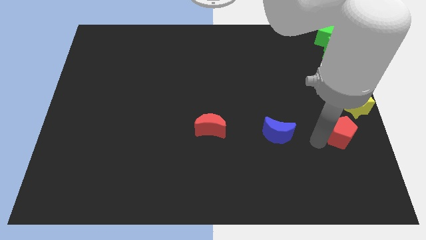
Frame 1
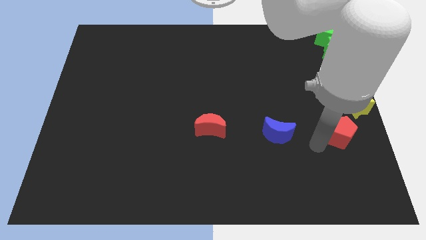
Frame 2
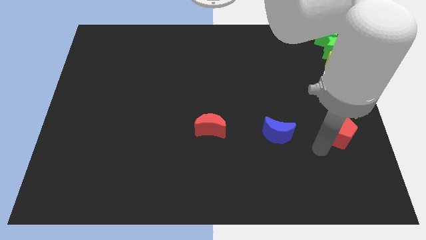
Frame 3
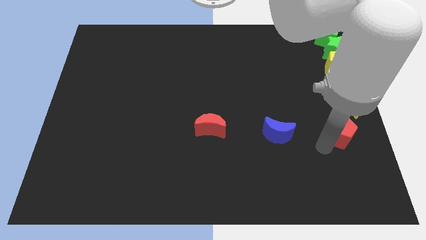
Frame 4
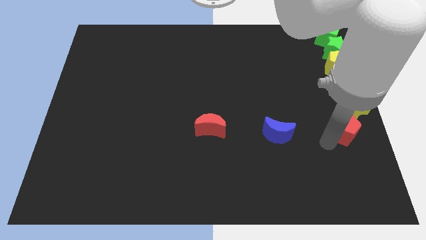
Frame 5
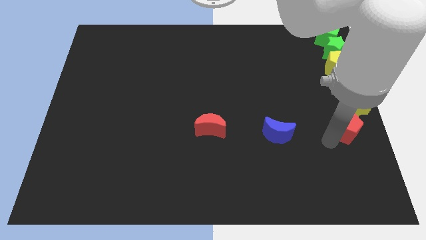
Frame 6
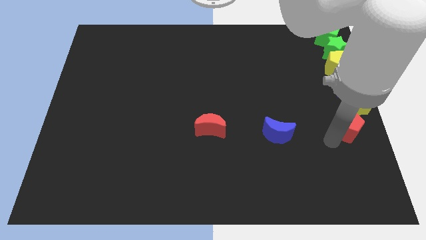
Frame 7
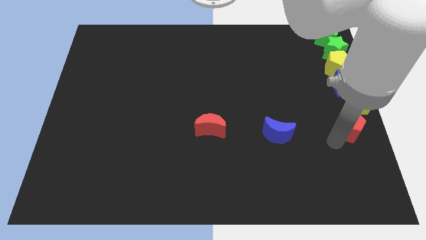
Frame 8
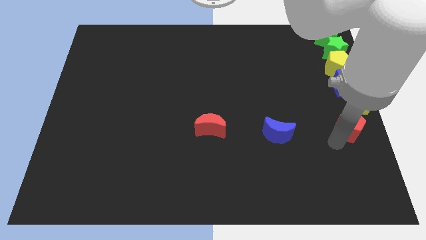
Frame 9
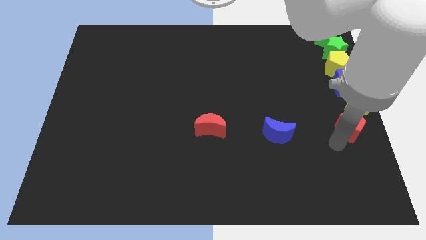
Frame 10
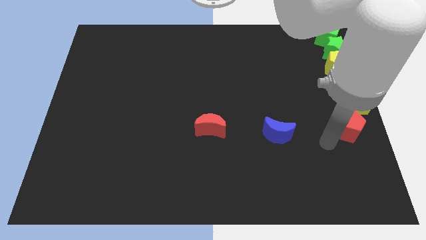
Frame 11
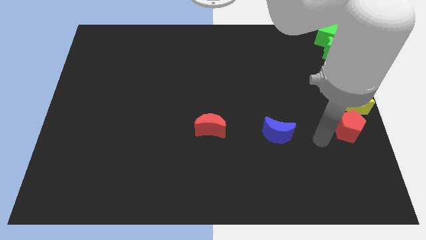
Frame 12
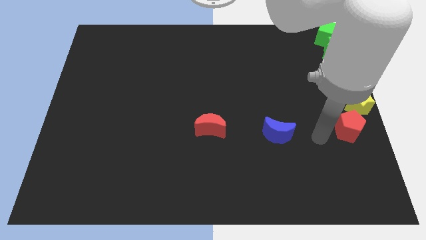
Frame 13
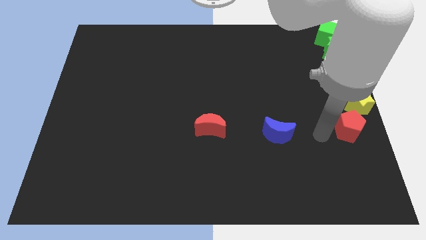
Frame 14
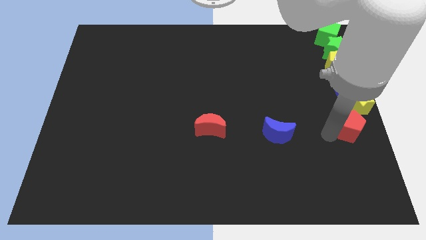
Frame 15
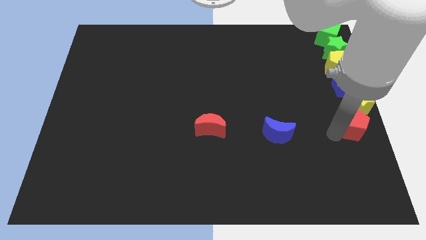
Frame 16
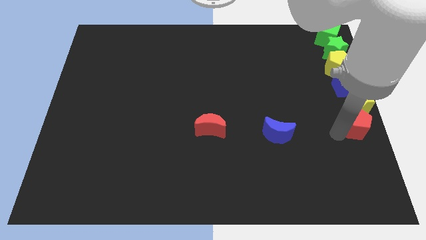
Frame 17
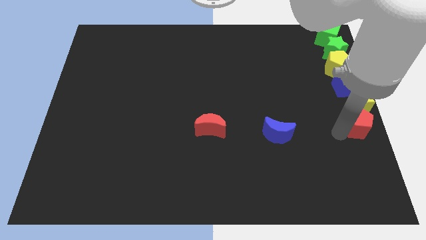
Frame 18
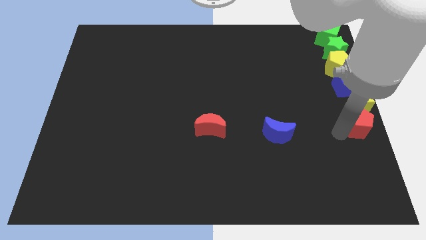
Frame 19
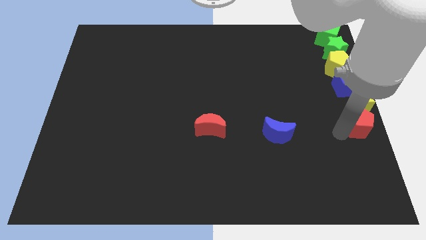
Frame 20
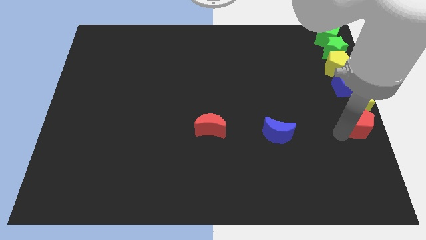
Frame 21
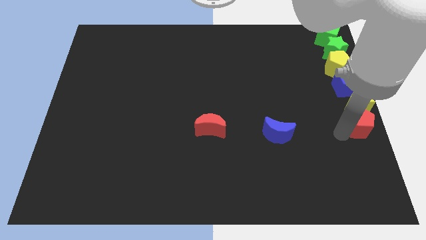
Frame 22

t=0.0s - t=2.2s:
place the red pentagon below the yellow star to form a vertical line

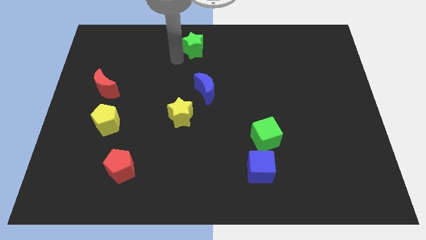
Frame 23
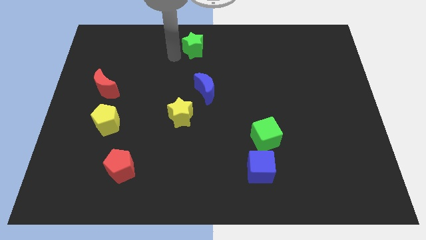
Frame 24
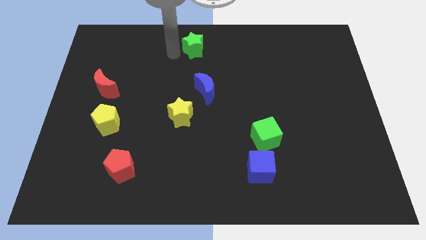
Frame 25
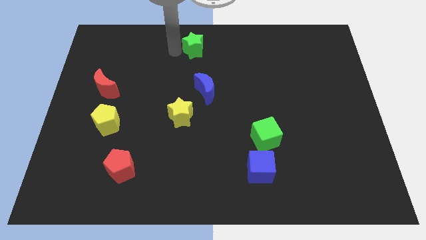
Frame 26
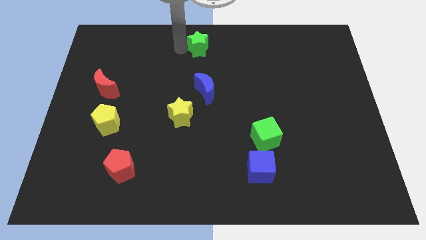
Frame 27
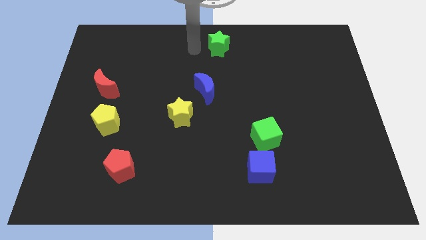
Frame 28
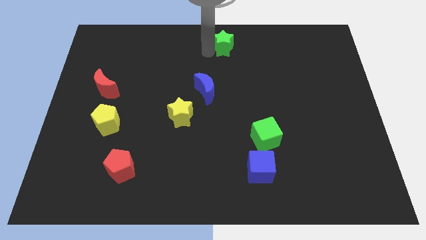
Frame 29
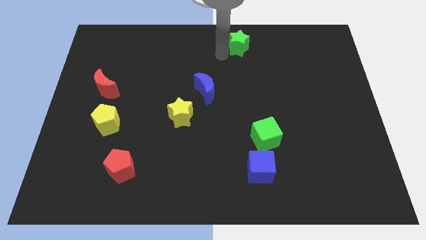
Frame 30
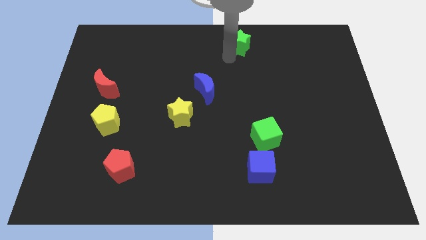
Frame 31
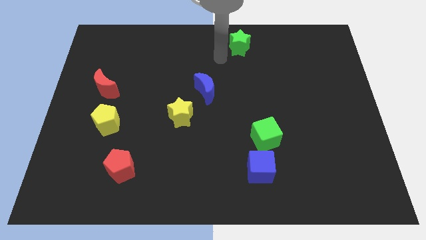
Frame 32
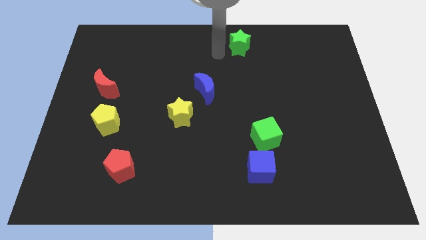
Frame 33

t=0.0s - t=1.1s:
push the green star at the top right of the blue crescent

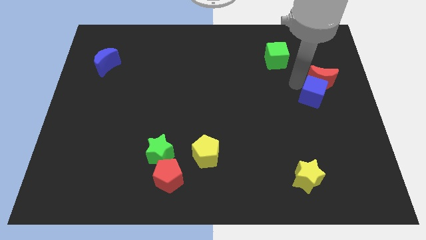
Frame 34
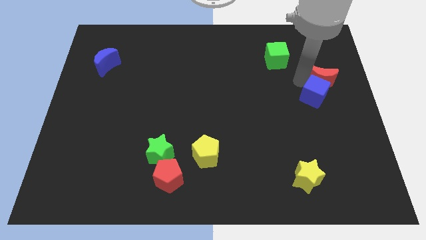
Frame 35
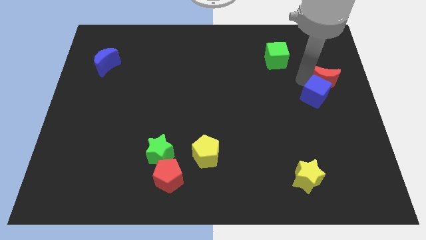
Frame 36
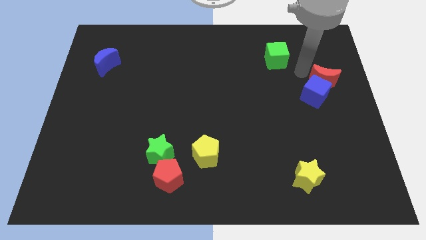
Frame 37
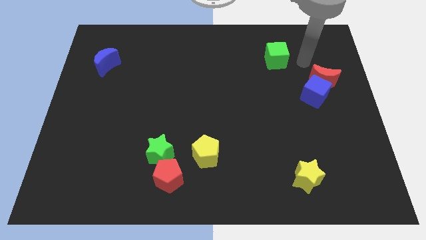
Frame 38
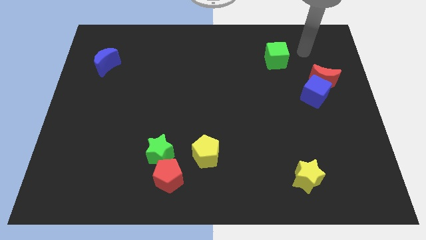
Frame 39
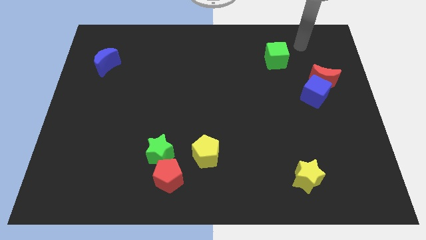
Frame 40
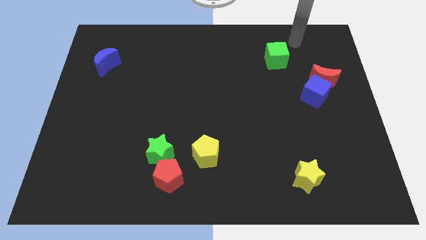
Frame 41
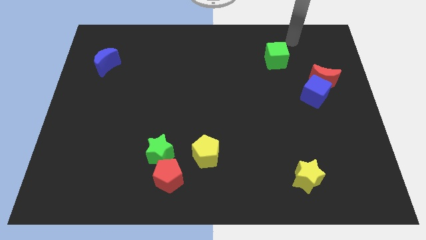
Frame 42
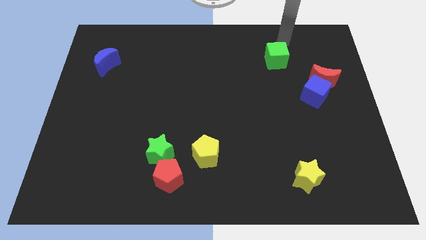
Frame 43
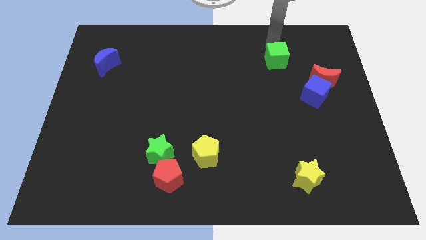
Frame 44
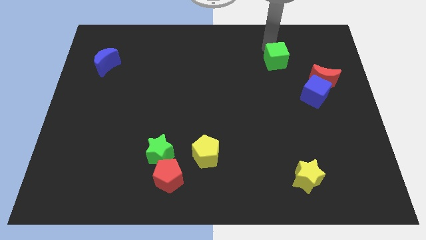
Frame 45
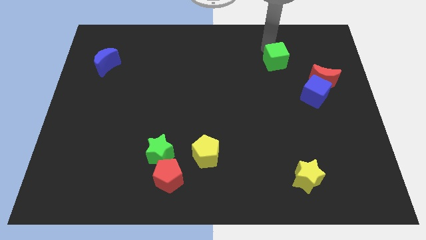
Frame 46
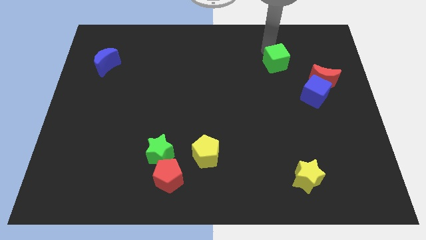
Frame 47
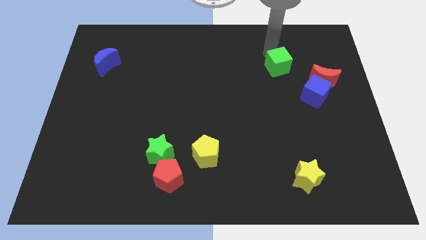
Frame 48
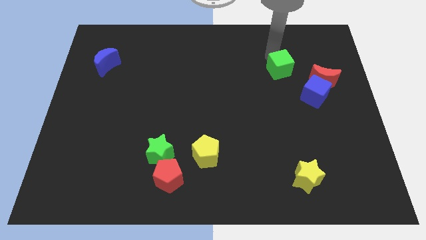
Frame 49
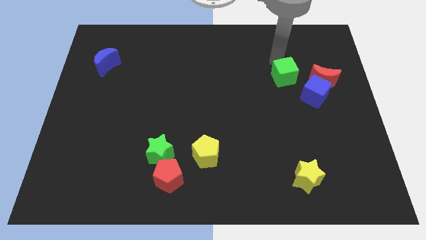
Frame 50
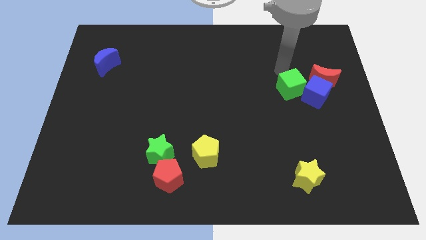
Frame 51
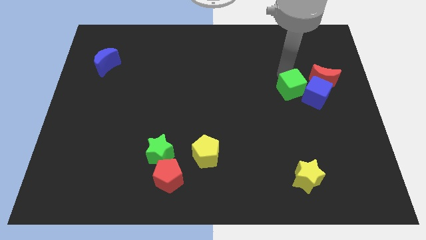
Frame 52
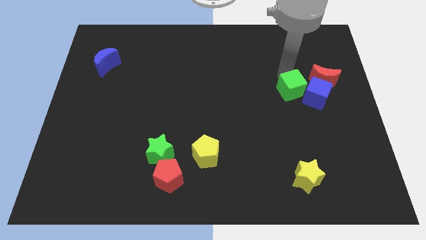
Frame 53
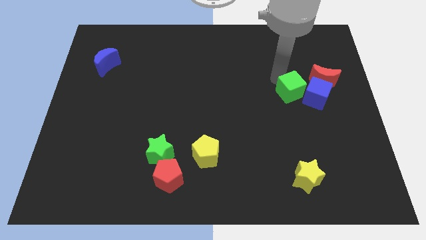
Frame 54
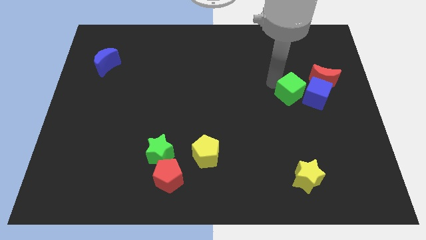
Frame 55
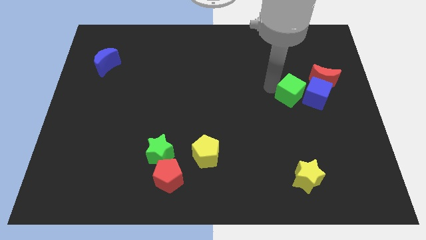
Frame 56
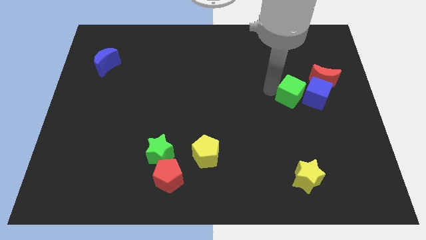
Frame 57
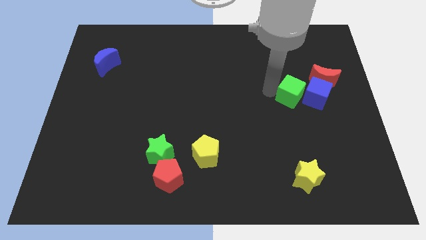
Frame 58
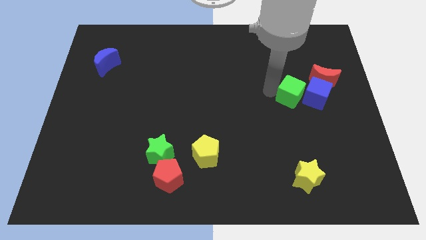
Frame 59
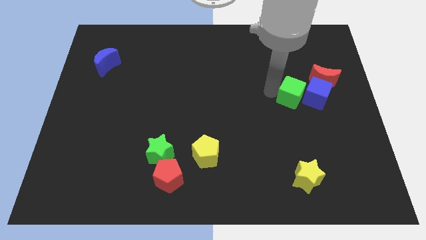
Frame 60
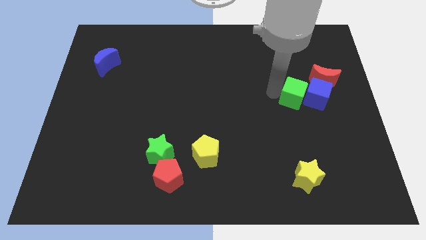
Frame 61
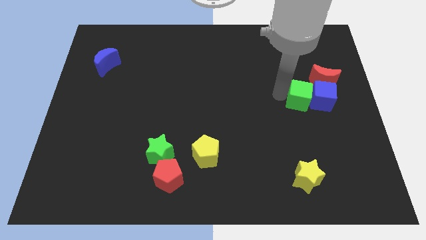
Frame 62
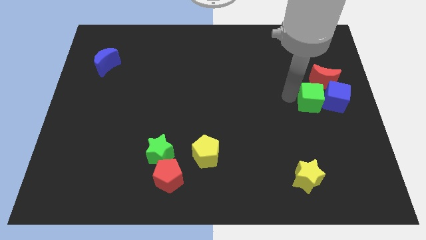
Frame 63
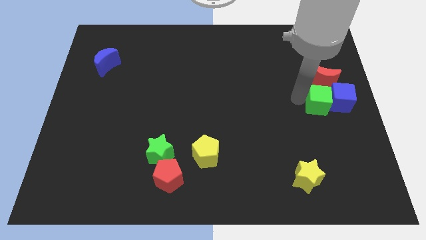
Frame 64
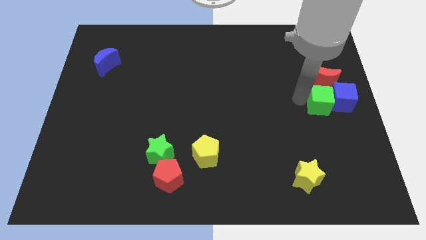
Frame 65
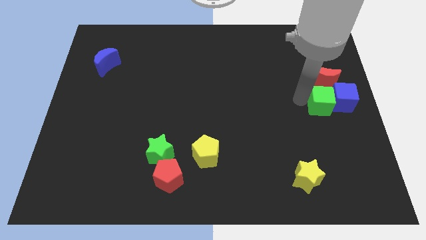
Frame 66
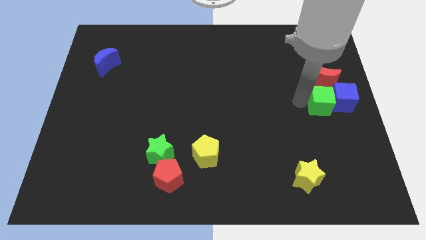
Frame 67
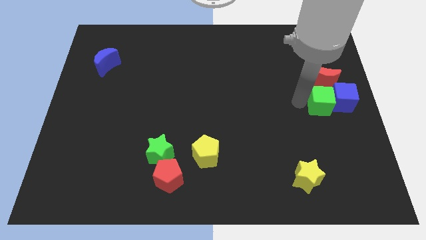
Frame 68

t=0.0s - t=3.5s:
push green cube in to blue cube

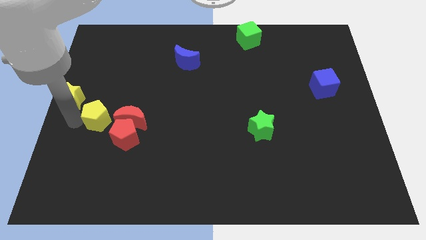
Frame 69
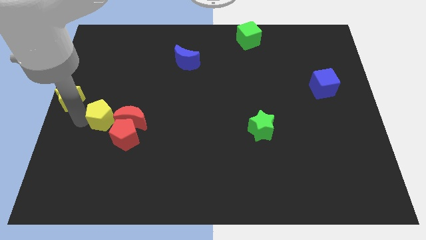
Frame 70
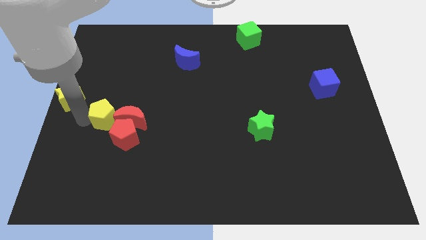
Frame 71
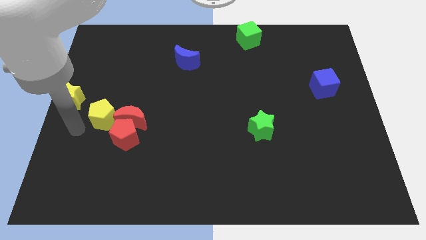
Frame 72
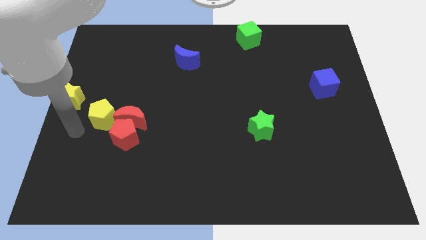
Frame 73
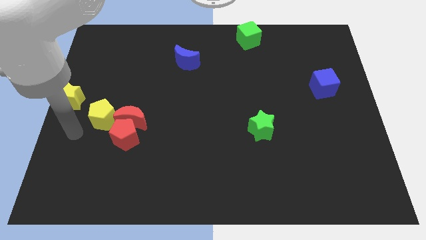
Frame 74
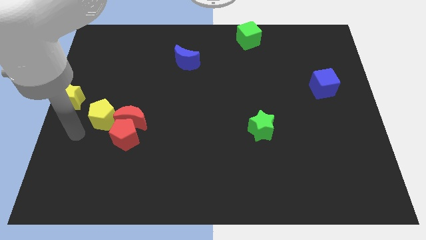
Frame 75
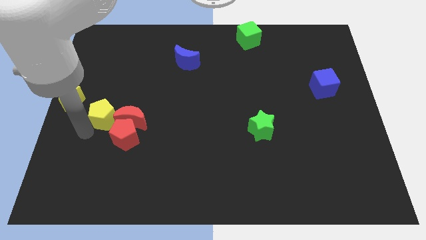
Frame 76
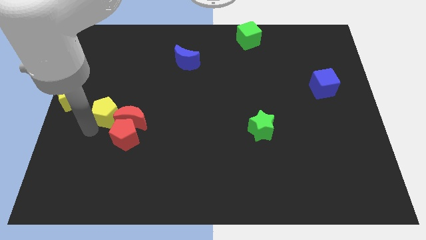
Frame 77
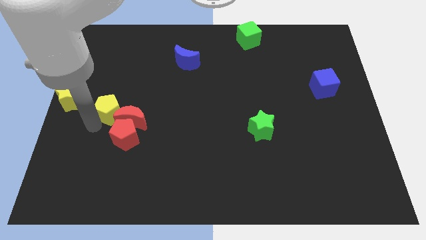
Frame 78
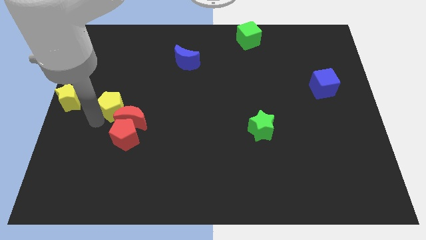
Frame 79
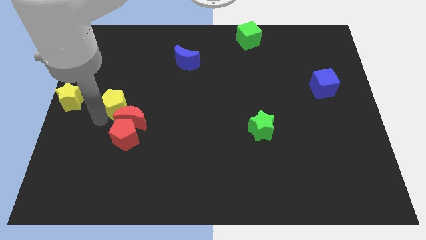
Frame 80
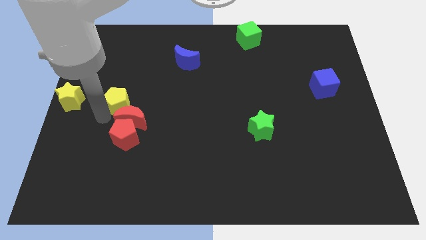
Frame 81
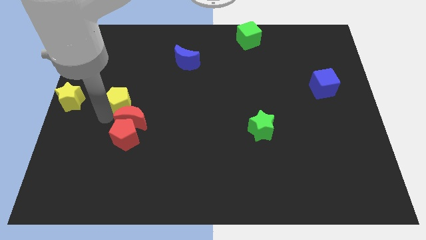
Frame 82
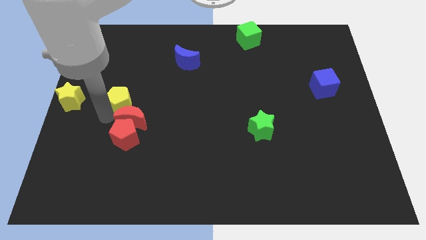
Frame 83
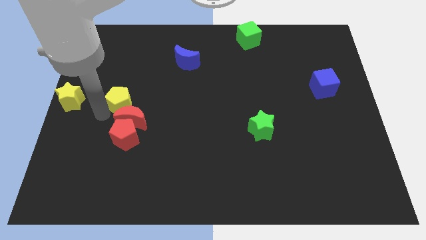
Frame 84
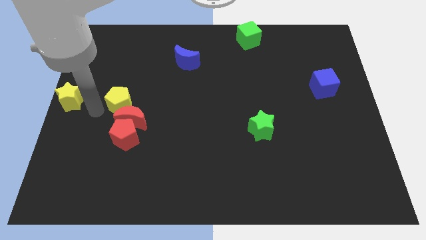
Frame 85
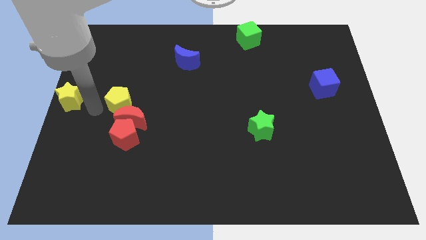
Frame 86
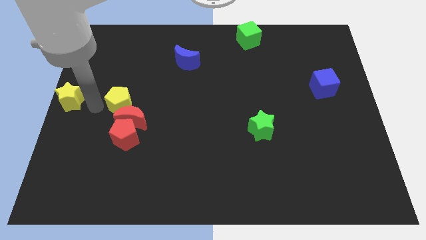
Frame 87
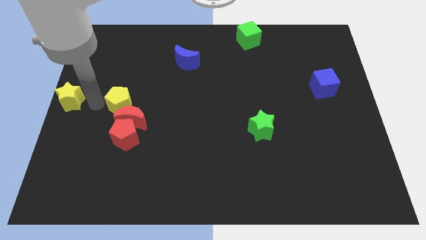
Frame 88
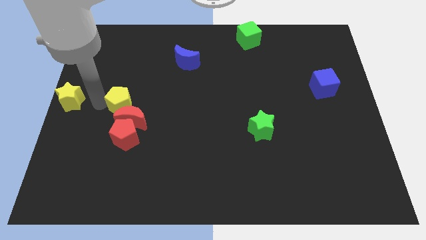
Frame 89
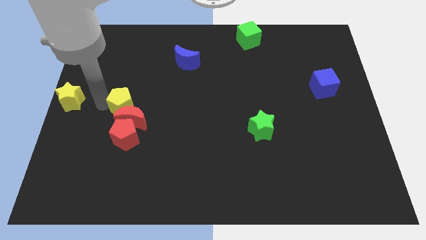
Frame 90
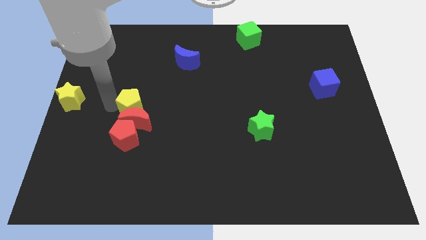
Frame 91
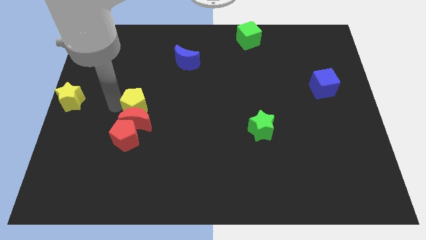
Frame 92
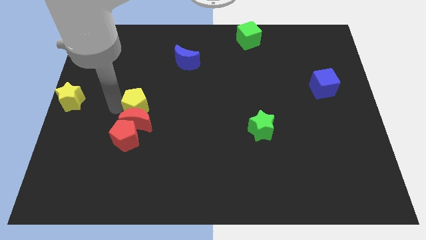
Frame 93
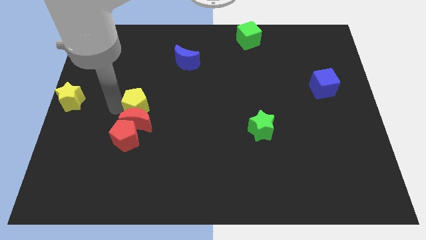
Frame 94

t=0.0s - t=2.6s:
push the red moon with yellow pentagon
